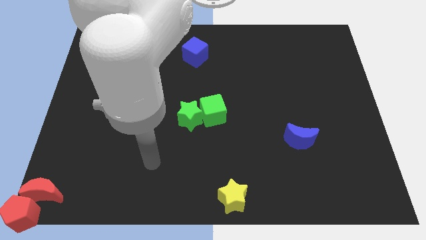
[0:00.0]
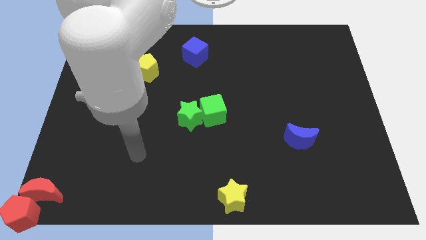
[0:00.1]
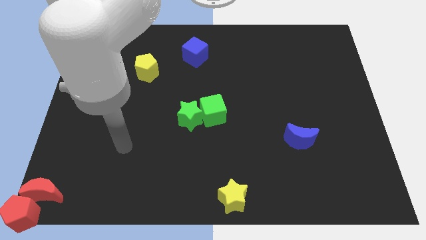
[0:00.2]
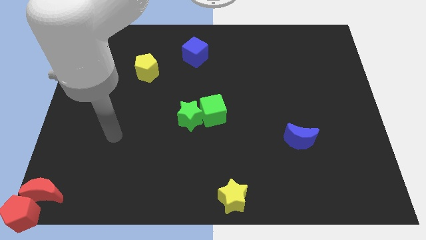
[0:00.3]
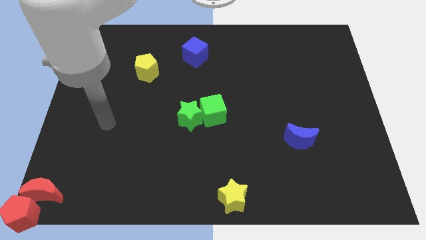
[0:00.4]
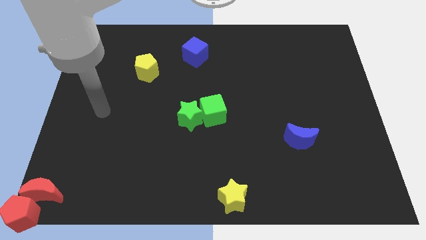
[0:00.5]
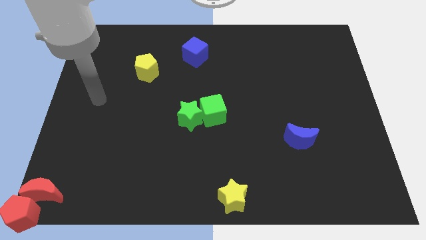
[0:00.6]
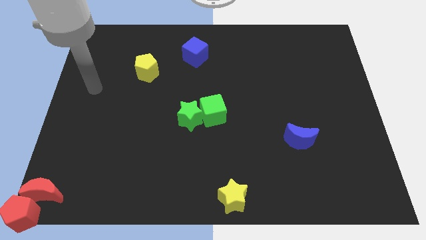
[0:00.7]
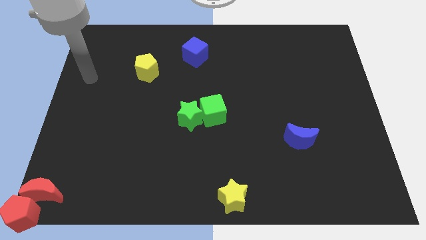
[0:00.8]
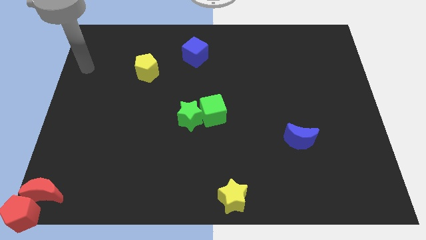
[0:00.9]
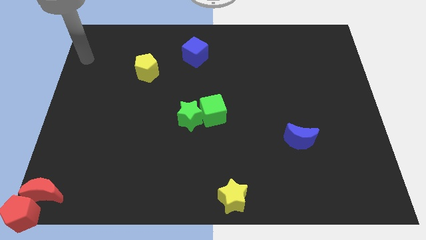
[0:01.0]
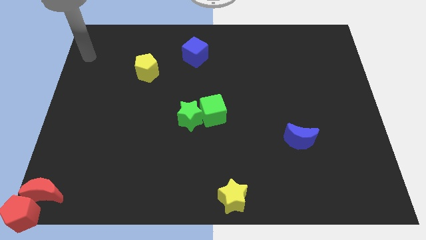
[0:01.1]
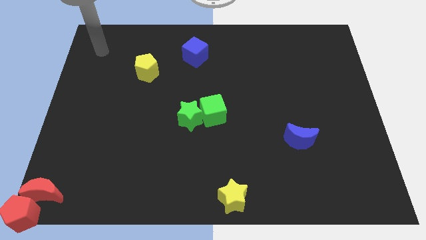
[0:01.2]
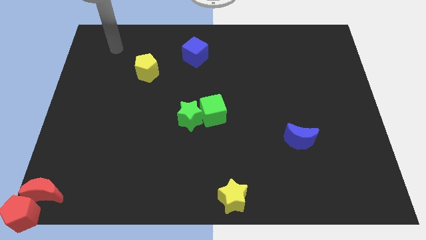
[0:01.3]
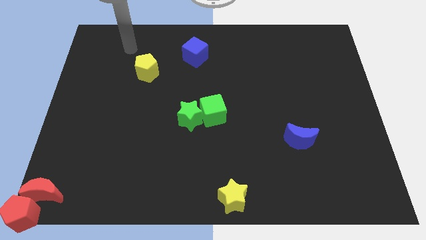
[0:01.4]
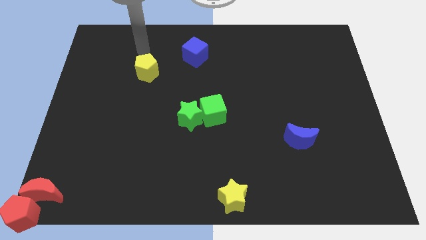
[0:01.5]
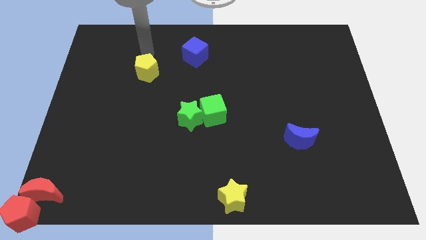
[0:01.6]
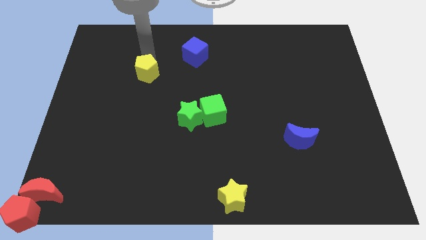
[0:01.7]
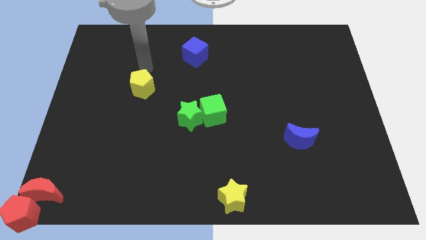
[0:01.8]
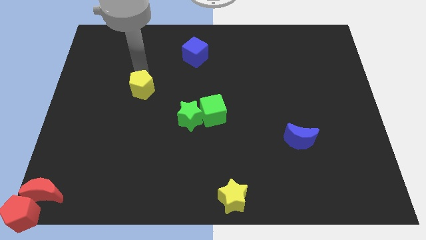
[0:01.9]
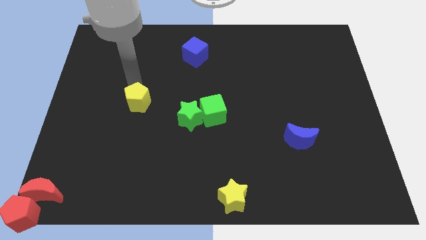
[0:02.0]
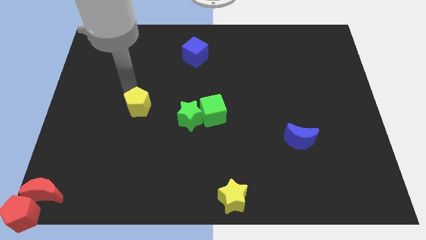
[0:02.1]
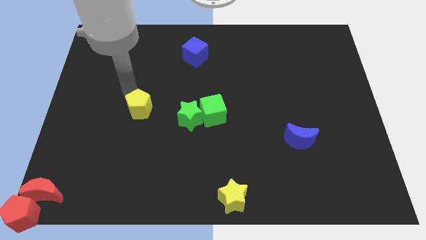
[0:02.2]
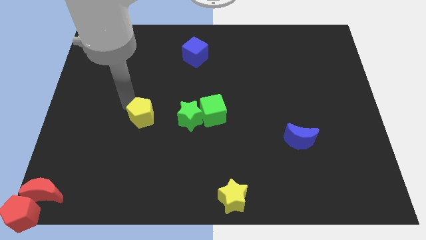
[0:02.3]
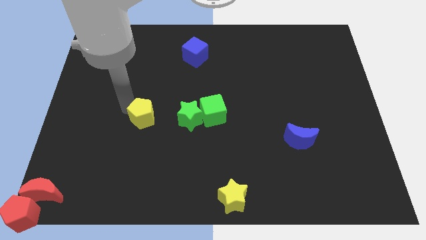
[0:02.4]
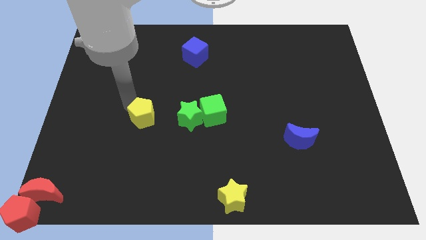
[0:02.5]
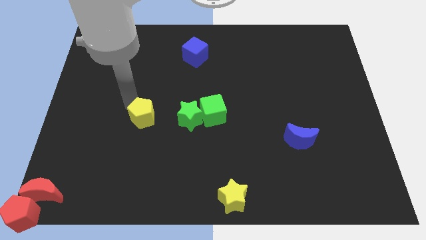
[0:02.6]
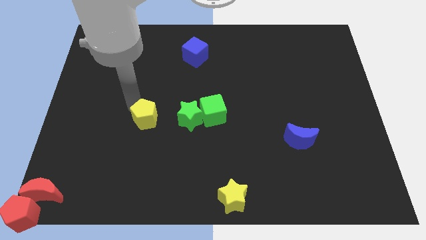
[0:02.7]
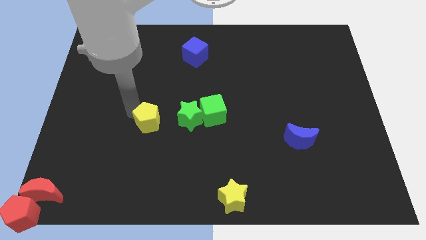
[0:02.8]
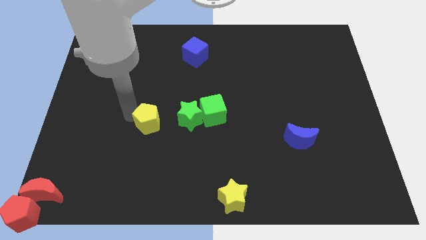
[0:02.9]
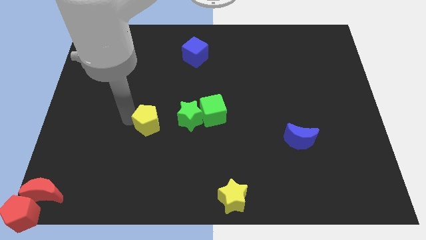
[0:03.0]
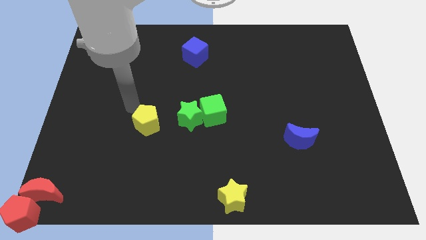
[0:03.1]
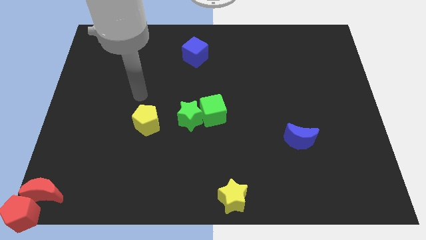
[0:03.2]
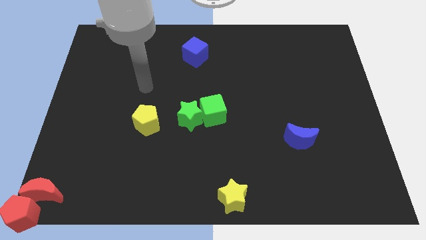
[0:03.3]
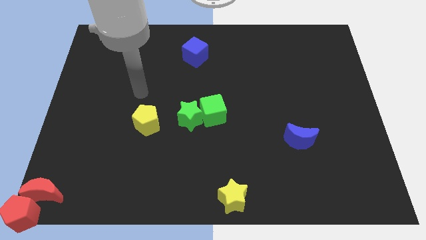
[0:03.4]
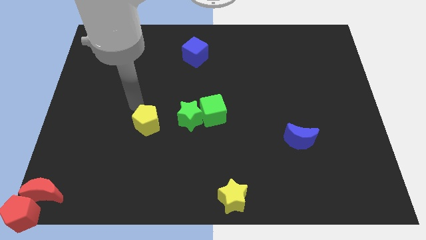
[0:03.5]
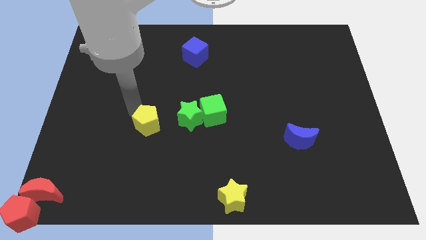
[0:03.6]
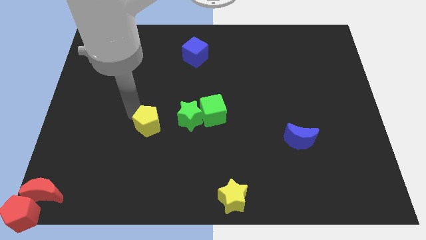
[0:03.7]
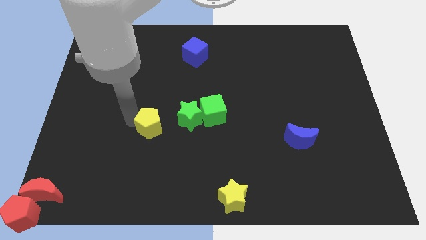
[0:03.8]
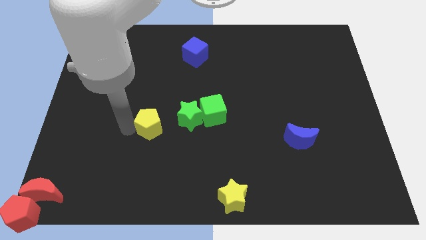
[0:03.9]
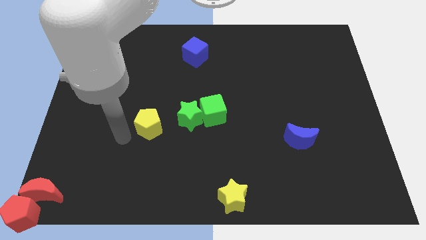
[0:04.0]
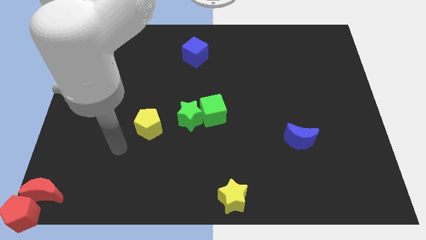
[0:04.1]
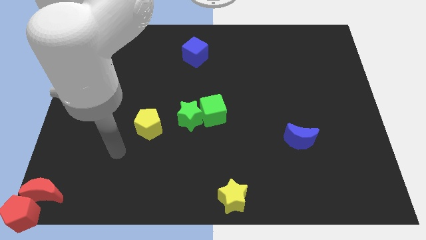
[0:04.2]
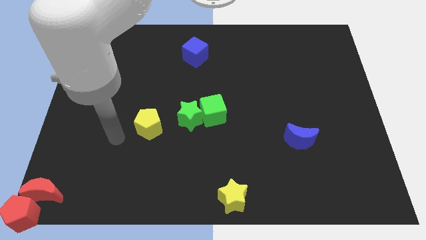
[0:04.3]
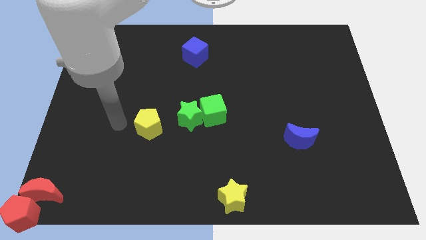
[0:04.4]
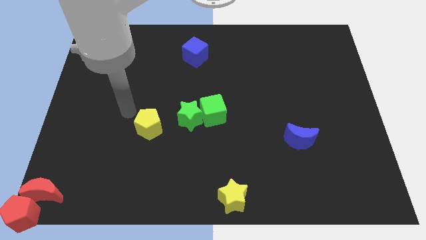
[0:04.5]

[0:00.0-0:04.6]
place the yellow pentagon left to the green star

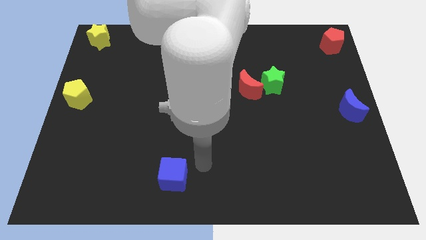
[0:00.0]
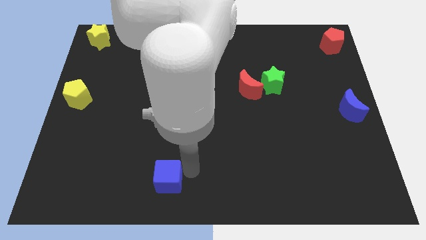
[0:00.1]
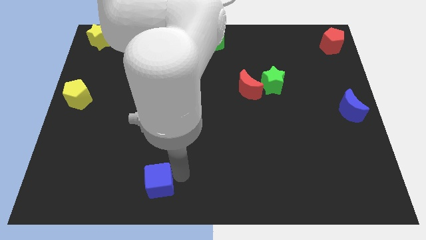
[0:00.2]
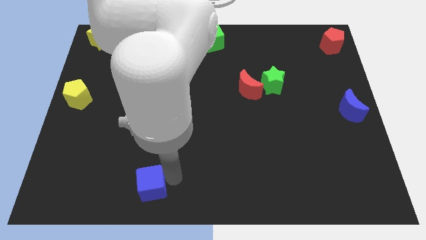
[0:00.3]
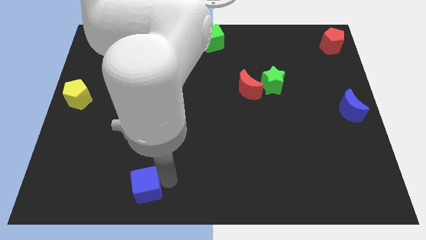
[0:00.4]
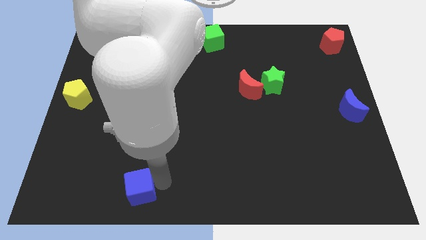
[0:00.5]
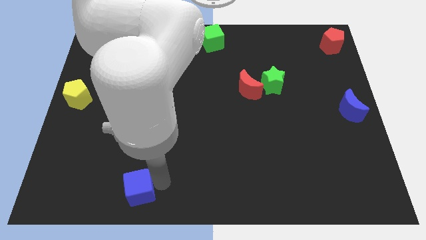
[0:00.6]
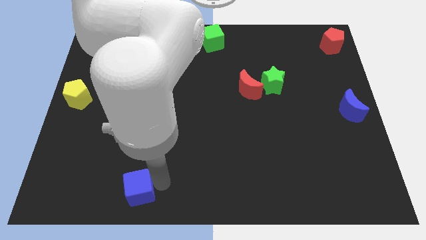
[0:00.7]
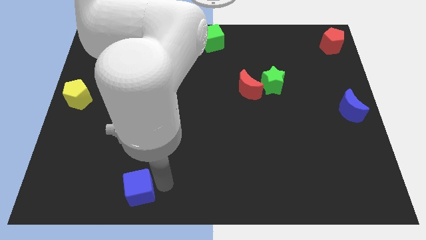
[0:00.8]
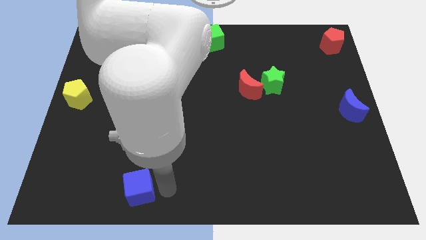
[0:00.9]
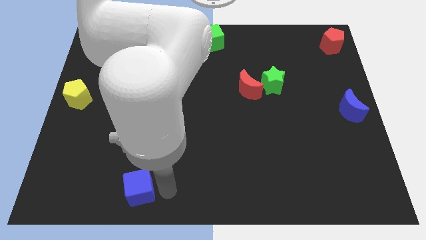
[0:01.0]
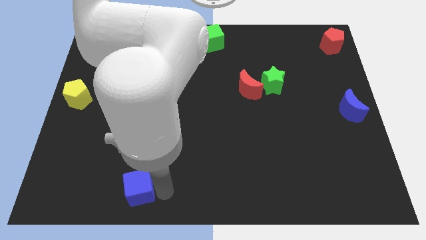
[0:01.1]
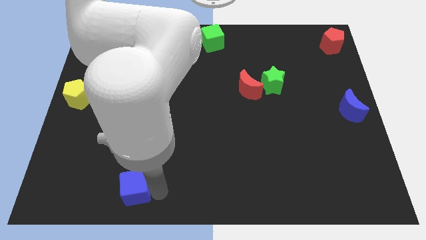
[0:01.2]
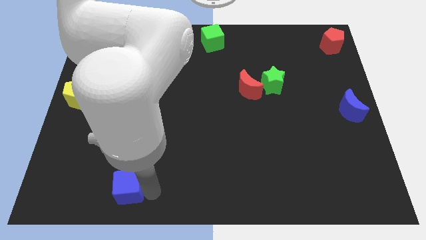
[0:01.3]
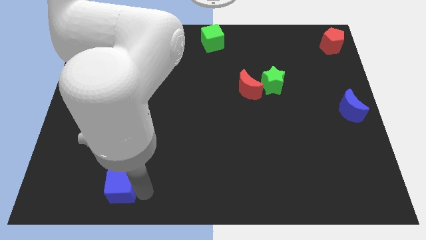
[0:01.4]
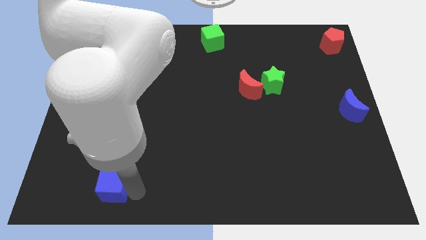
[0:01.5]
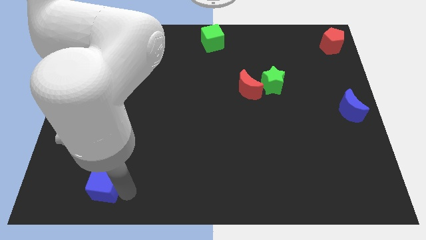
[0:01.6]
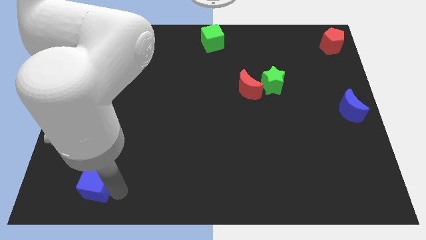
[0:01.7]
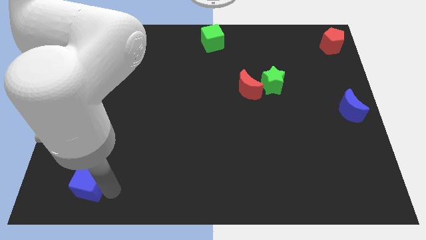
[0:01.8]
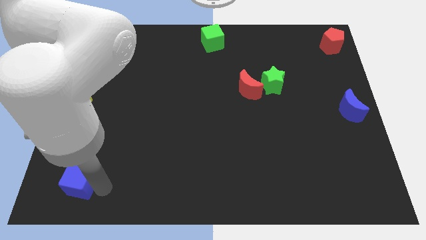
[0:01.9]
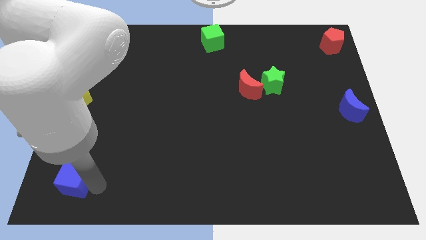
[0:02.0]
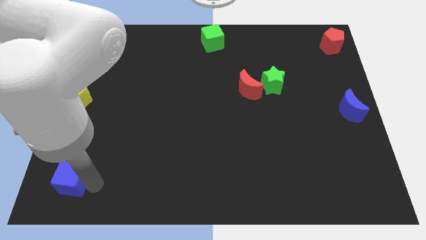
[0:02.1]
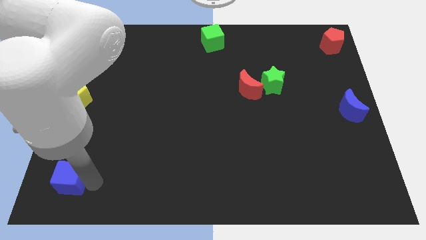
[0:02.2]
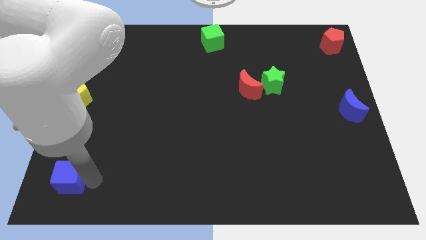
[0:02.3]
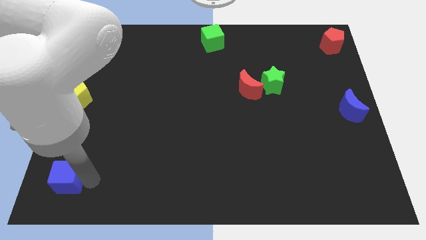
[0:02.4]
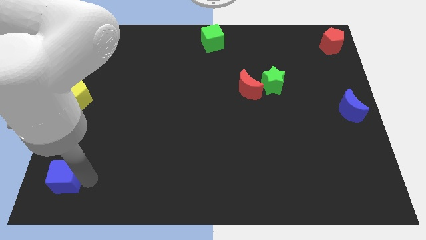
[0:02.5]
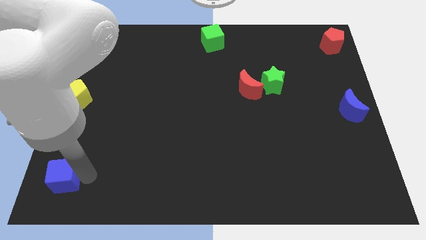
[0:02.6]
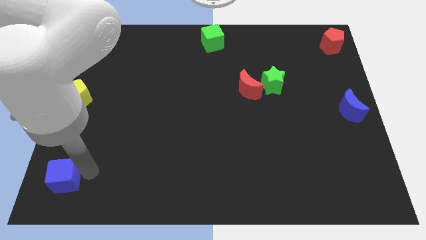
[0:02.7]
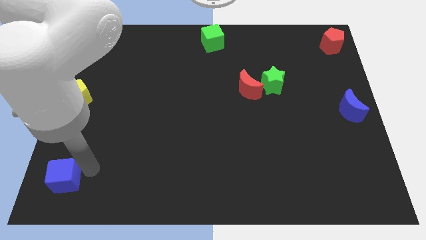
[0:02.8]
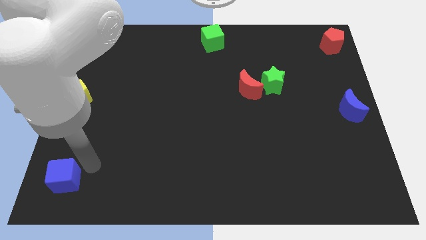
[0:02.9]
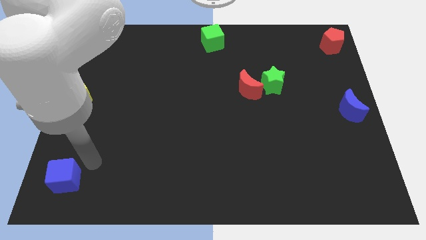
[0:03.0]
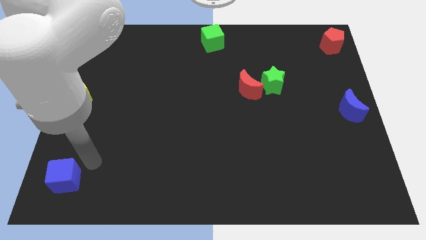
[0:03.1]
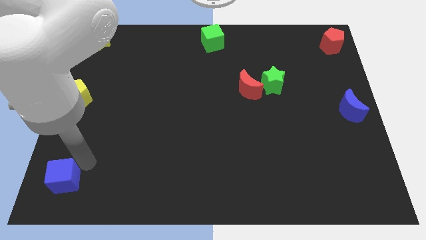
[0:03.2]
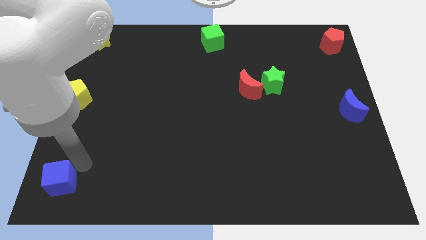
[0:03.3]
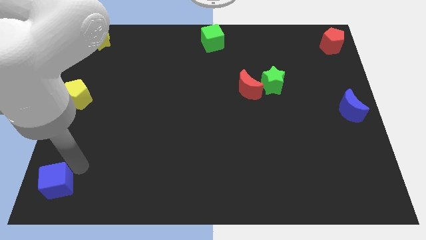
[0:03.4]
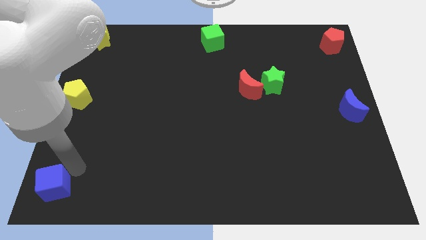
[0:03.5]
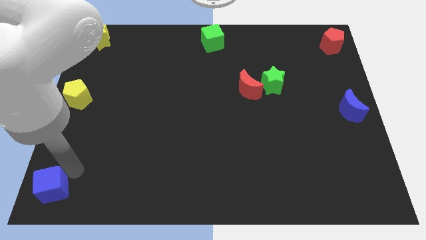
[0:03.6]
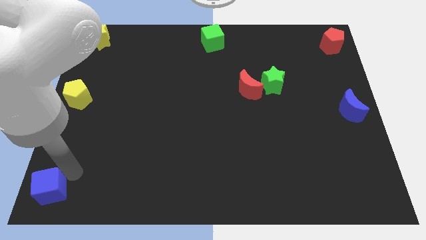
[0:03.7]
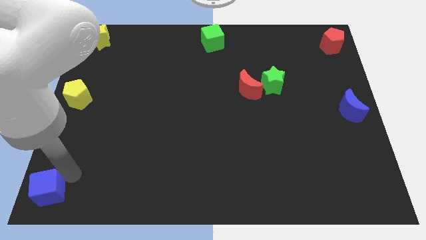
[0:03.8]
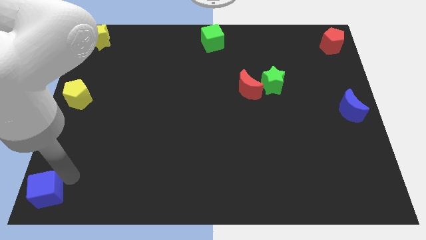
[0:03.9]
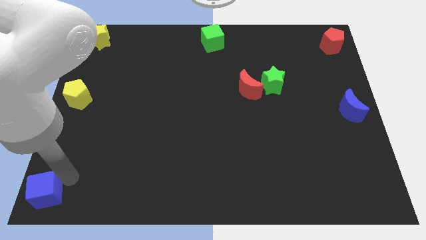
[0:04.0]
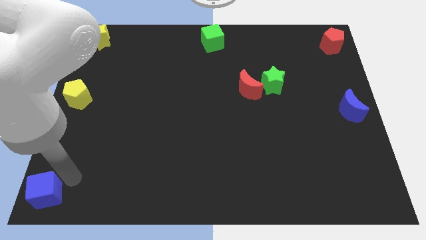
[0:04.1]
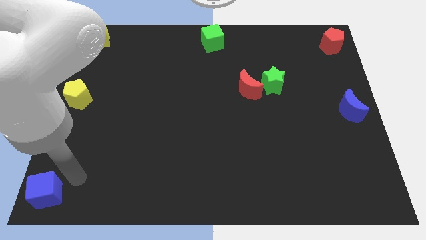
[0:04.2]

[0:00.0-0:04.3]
move the blue cube to the bottom left to the board

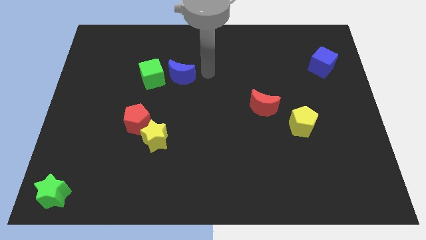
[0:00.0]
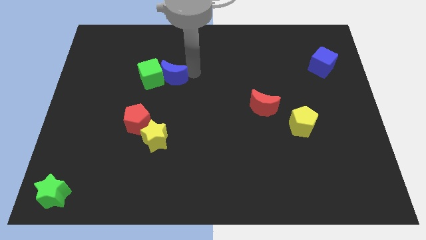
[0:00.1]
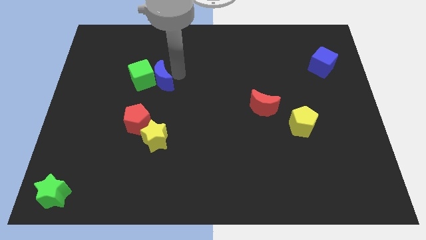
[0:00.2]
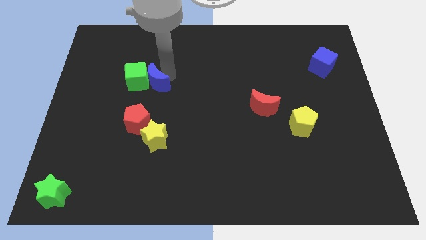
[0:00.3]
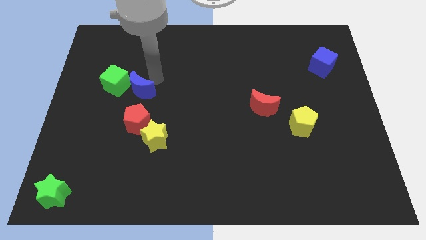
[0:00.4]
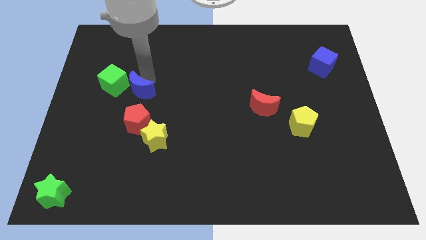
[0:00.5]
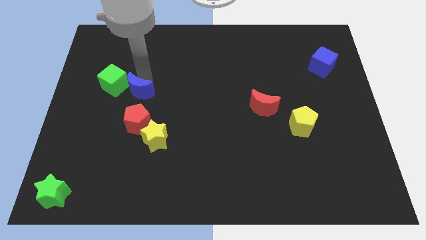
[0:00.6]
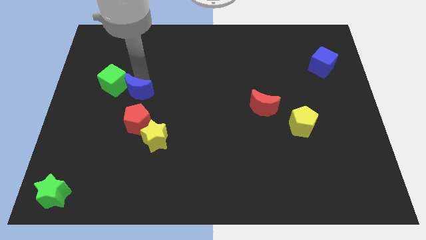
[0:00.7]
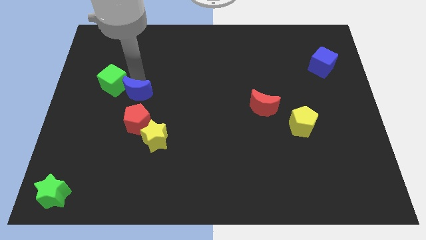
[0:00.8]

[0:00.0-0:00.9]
push the green cube and blue moon towards the left side of the board
